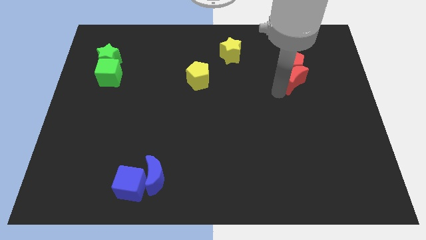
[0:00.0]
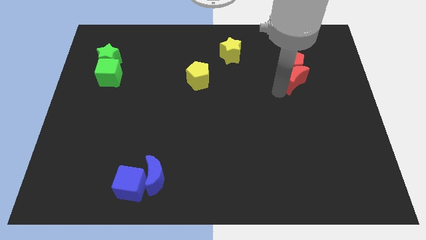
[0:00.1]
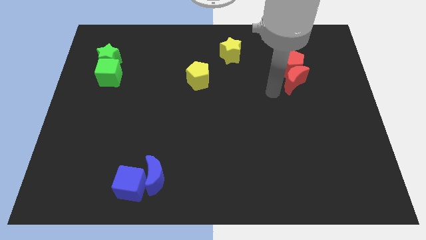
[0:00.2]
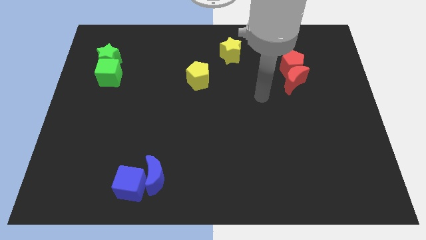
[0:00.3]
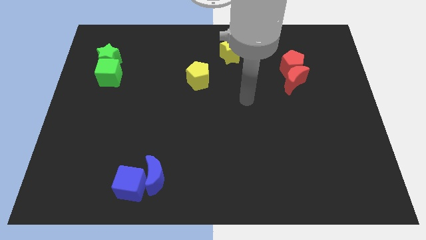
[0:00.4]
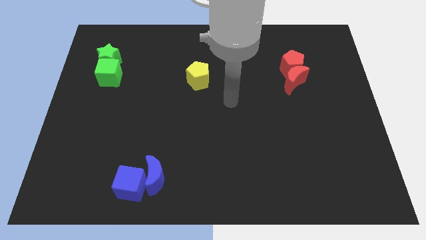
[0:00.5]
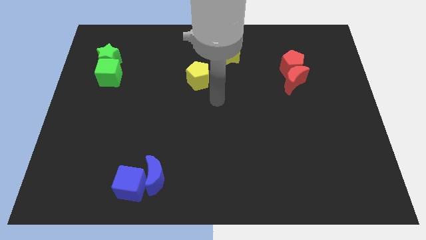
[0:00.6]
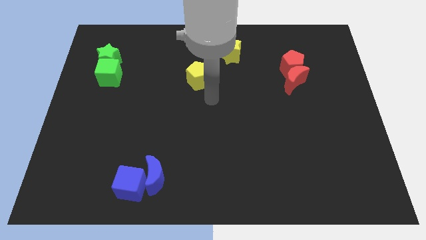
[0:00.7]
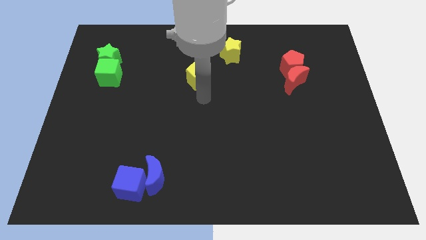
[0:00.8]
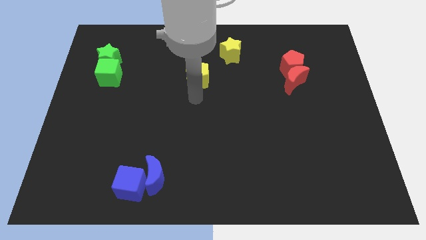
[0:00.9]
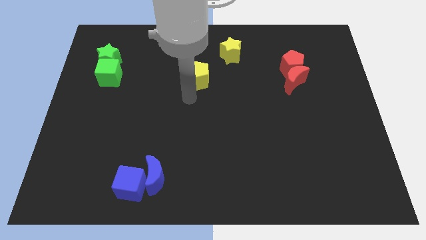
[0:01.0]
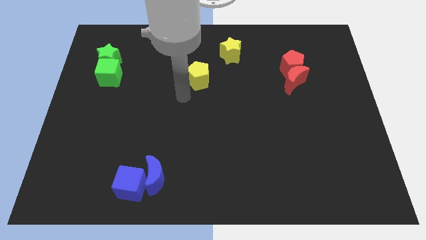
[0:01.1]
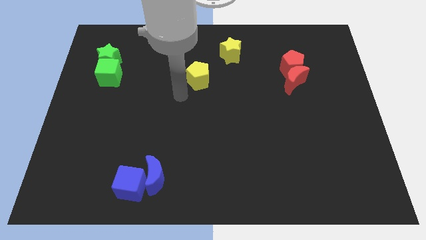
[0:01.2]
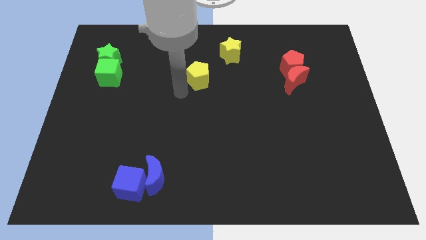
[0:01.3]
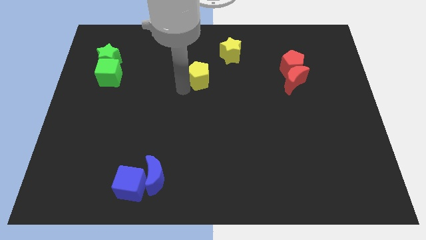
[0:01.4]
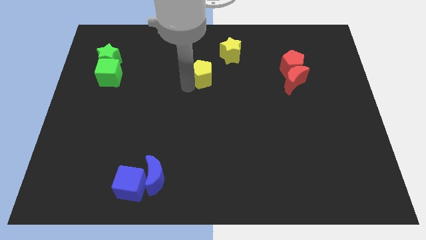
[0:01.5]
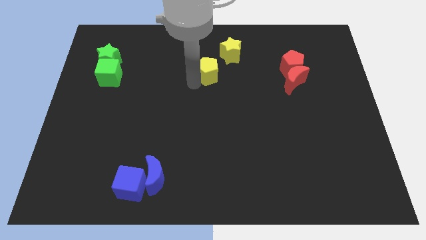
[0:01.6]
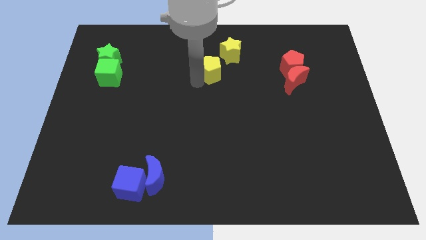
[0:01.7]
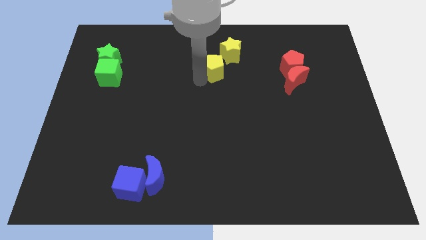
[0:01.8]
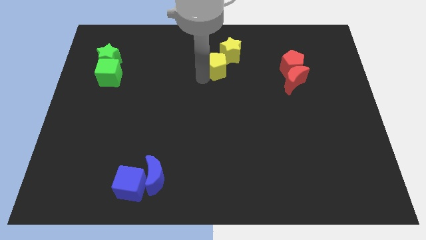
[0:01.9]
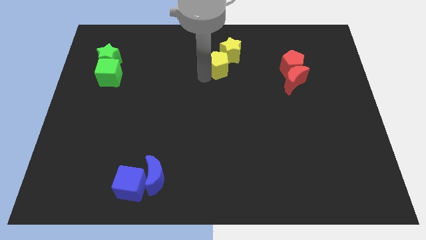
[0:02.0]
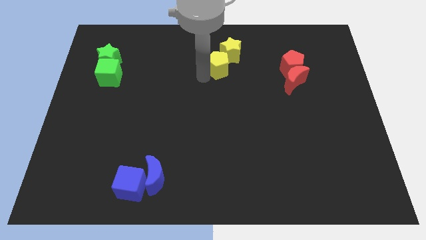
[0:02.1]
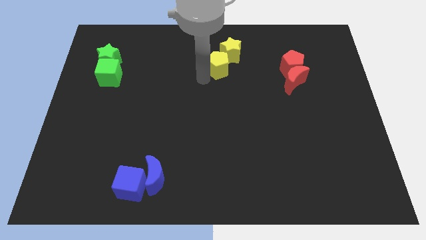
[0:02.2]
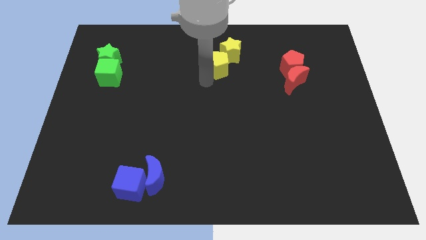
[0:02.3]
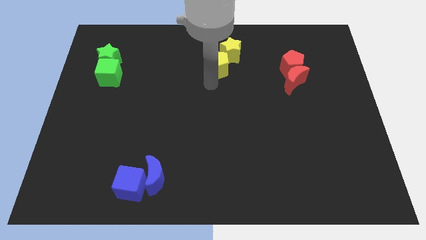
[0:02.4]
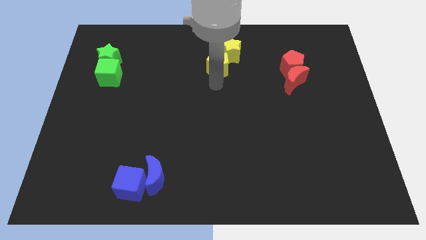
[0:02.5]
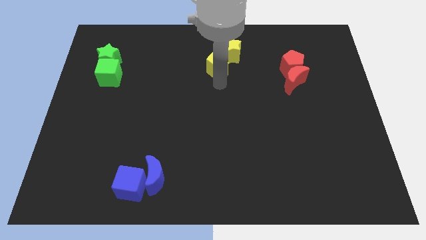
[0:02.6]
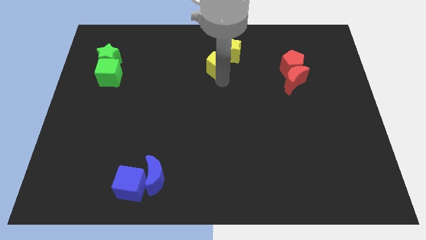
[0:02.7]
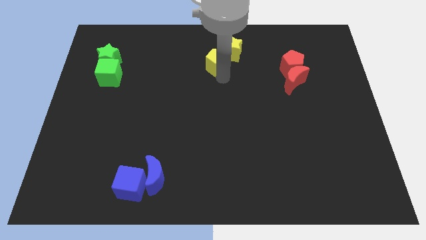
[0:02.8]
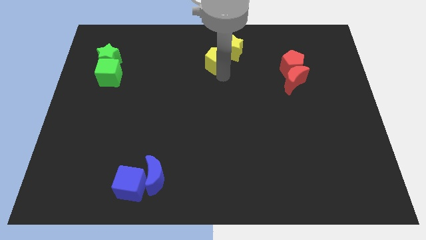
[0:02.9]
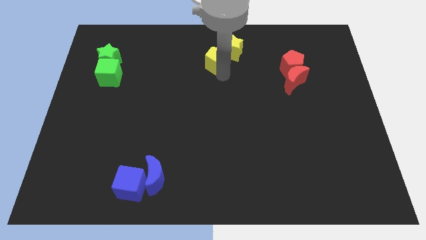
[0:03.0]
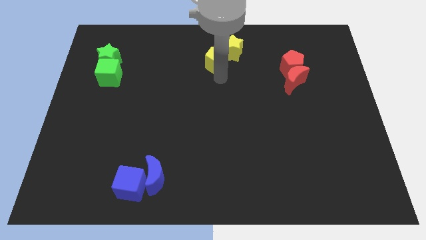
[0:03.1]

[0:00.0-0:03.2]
slide the yellow pentagon into the bottom left side of the yellow star

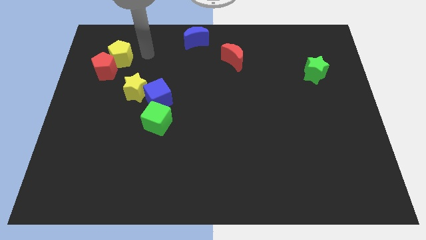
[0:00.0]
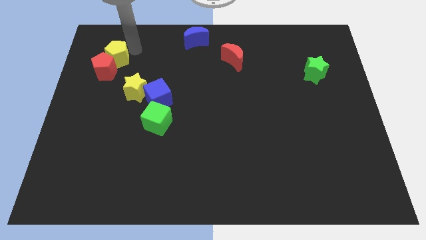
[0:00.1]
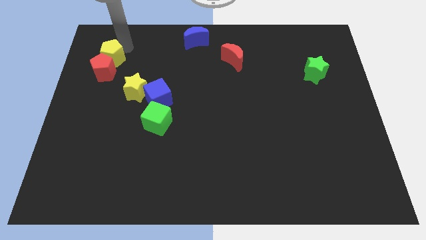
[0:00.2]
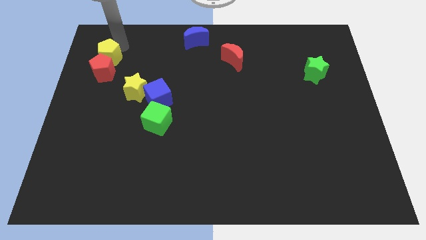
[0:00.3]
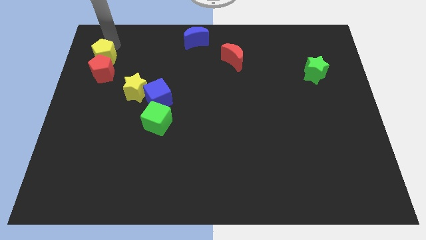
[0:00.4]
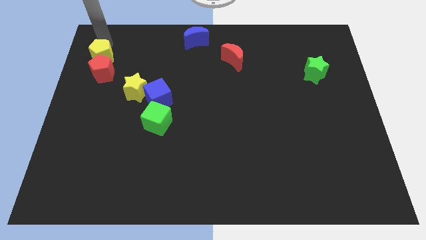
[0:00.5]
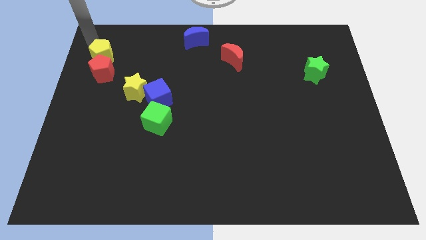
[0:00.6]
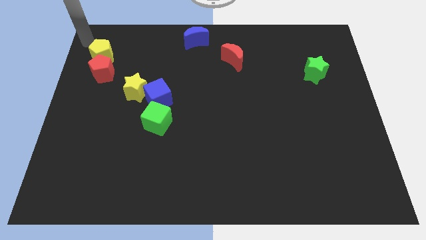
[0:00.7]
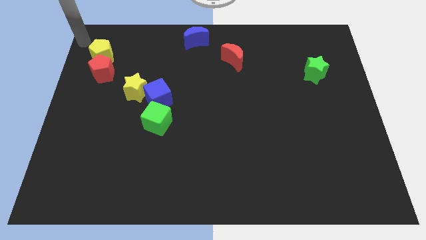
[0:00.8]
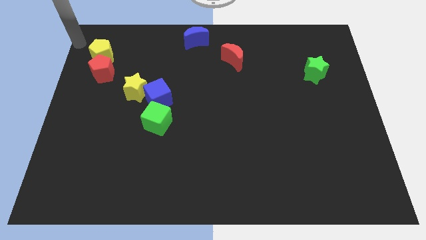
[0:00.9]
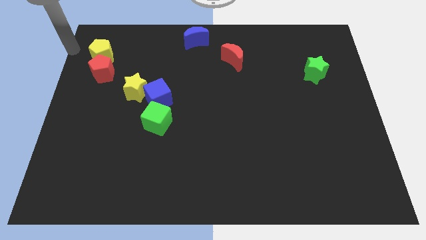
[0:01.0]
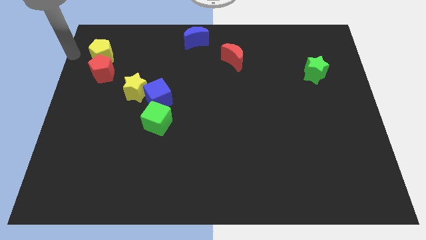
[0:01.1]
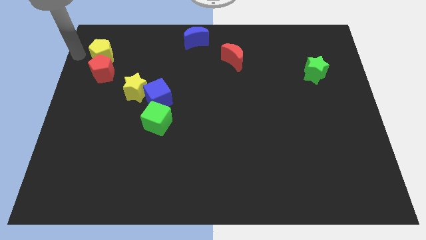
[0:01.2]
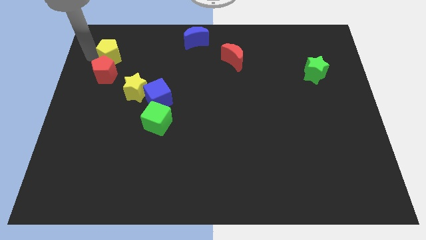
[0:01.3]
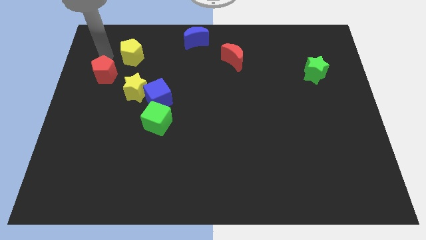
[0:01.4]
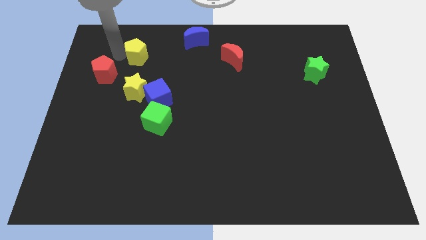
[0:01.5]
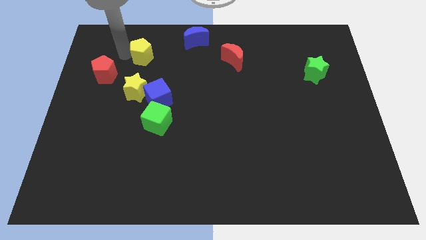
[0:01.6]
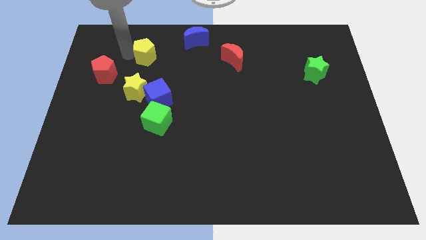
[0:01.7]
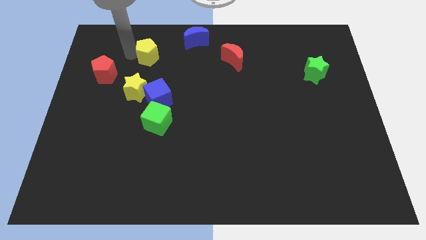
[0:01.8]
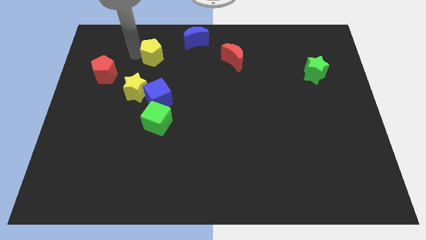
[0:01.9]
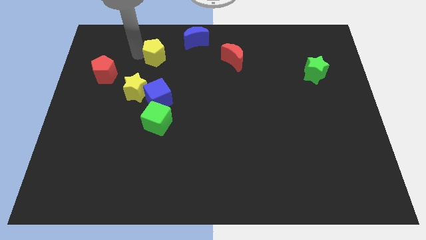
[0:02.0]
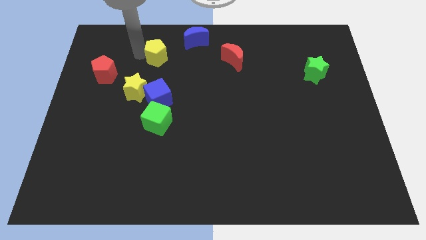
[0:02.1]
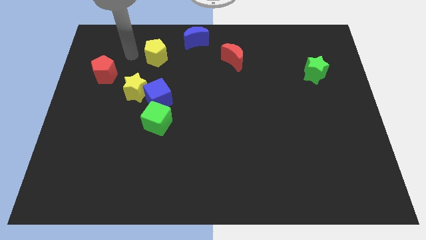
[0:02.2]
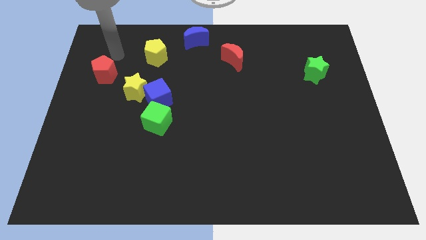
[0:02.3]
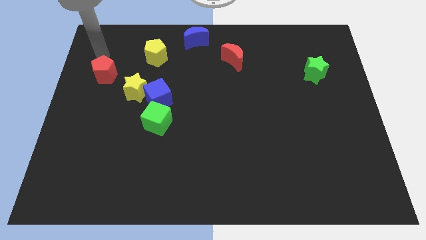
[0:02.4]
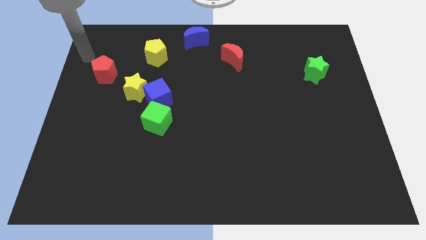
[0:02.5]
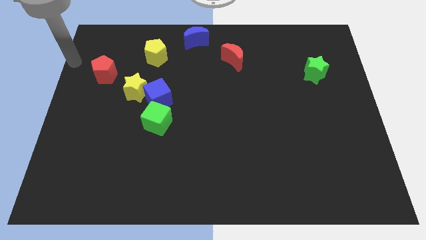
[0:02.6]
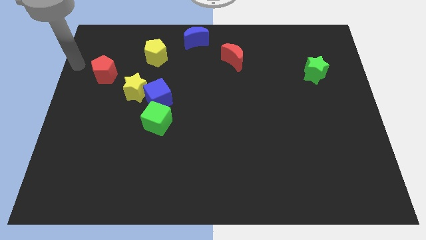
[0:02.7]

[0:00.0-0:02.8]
place the yellow pentagon above the blue cube

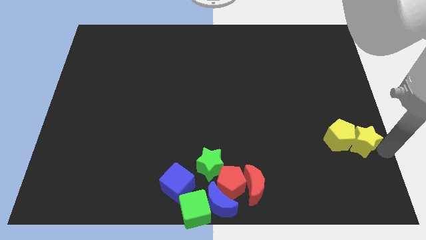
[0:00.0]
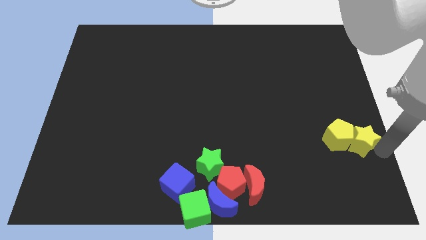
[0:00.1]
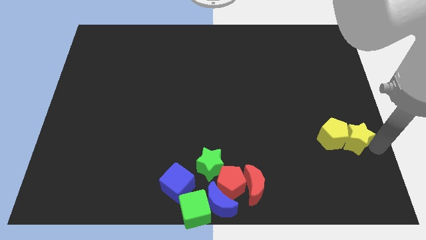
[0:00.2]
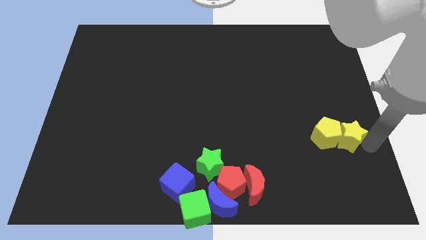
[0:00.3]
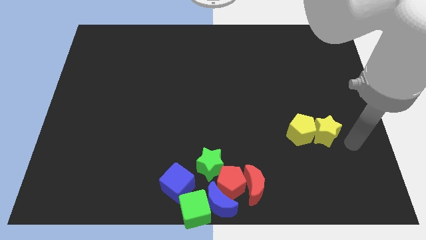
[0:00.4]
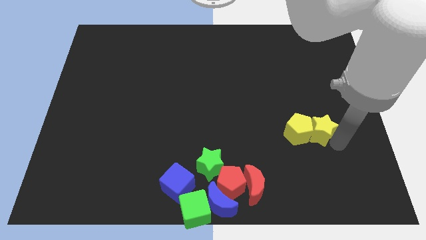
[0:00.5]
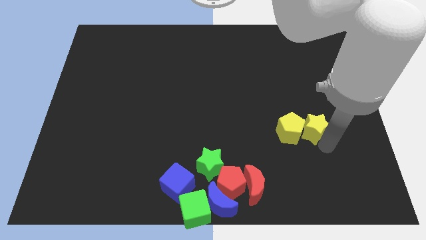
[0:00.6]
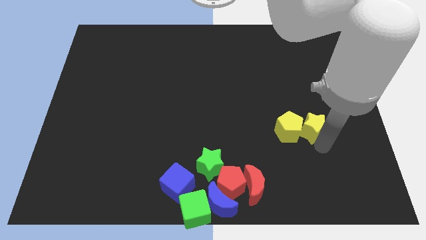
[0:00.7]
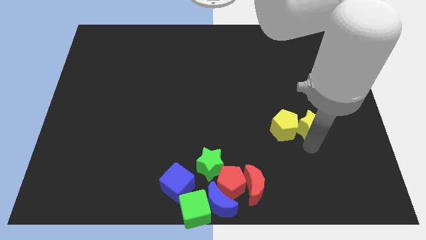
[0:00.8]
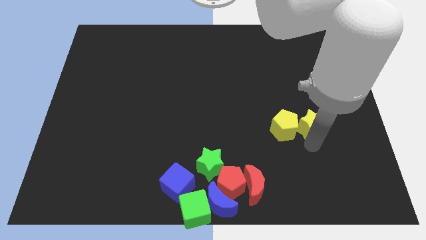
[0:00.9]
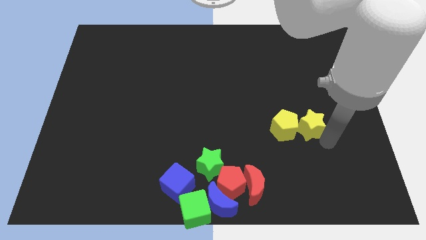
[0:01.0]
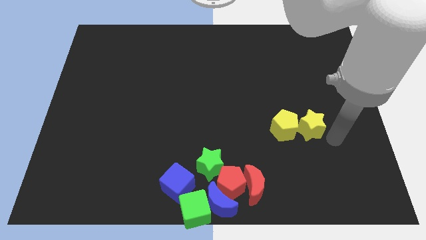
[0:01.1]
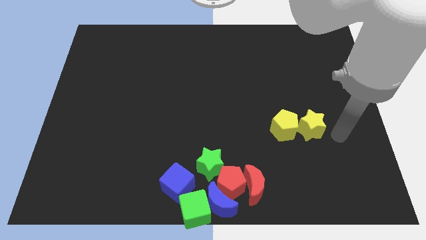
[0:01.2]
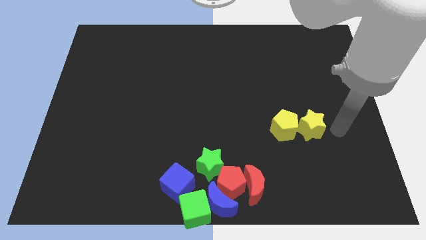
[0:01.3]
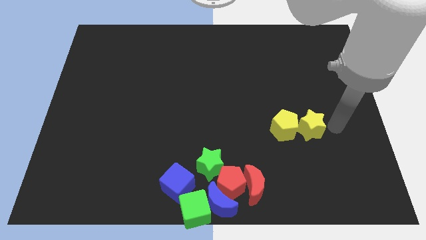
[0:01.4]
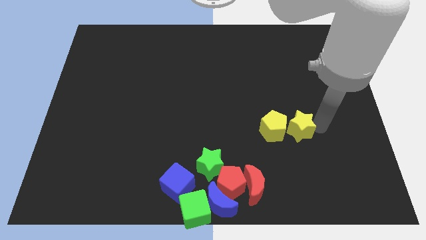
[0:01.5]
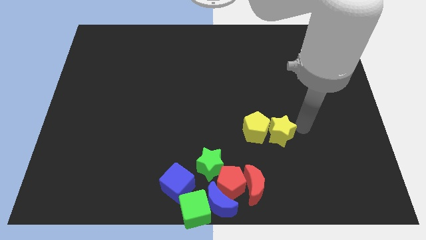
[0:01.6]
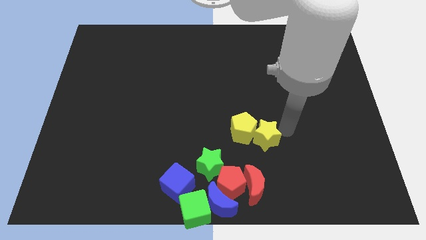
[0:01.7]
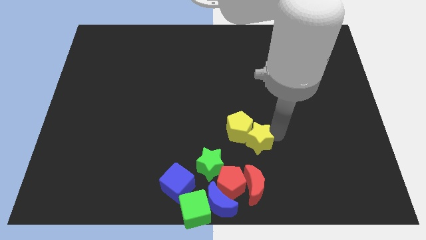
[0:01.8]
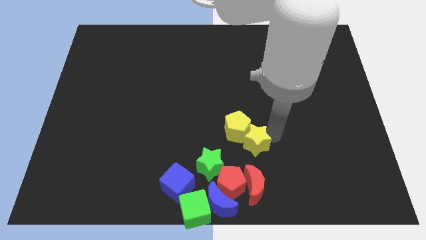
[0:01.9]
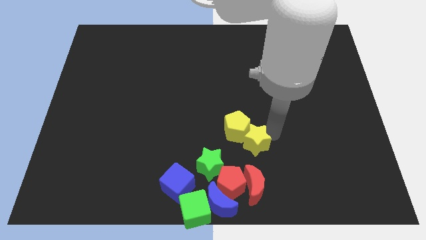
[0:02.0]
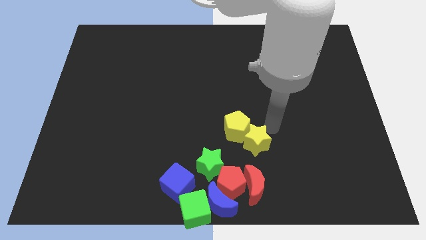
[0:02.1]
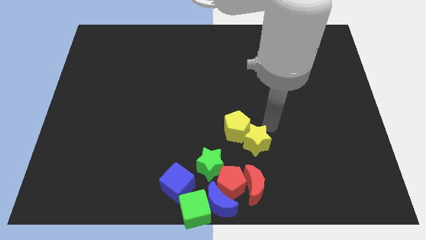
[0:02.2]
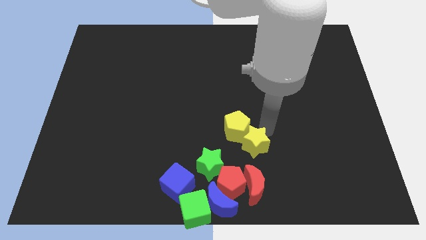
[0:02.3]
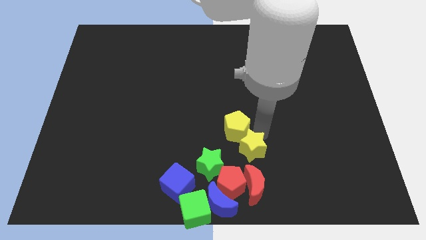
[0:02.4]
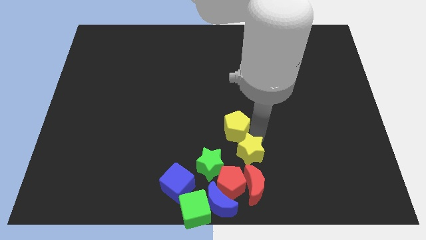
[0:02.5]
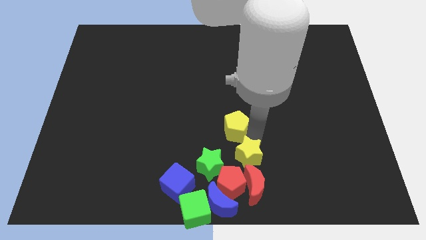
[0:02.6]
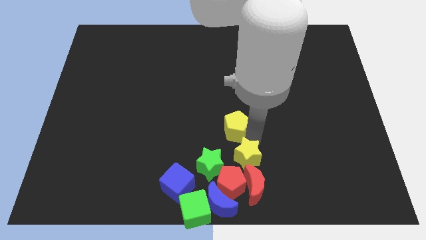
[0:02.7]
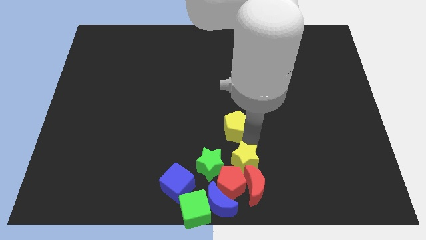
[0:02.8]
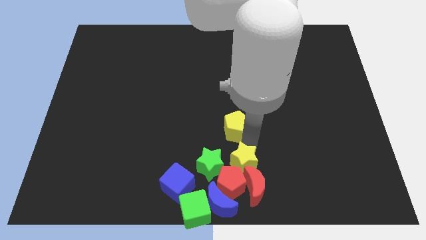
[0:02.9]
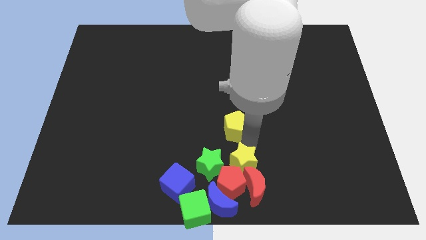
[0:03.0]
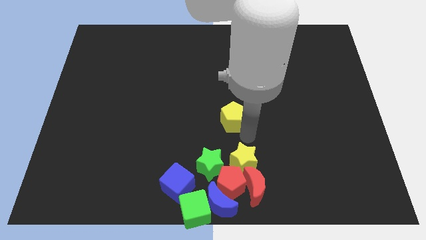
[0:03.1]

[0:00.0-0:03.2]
place yellow star on the top of red blocks
